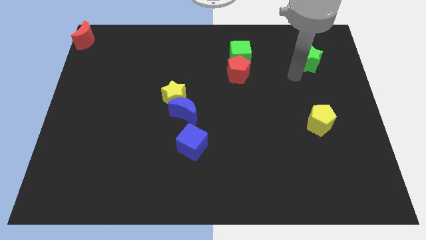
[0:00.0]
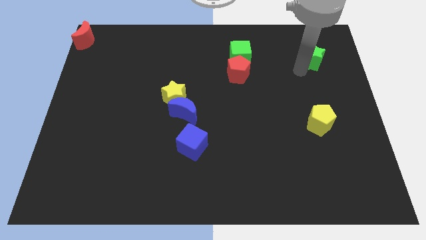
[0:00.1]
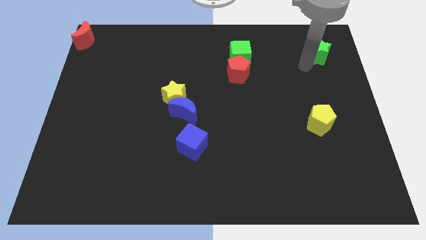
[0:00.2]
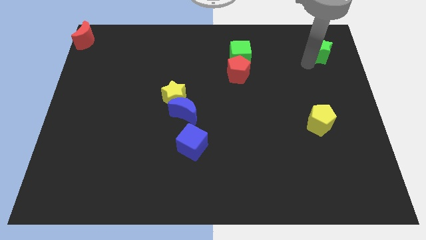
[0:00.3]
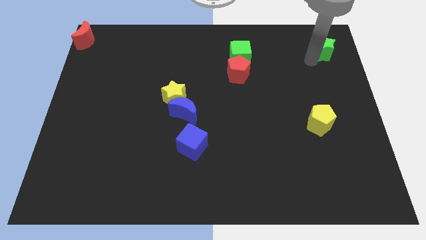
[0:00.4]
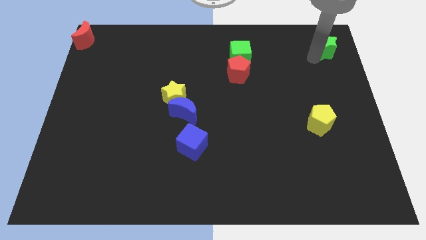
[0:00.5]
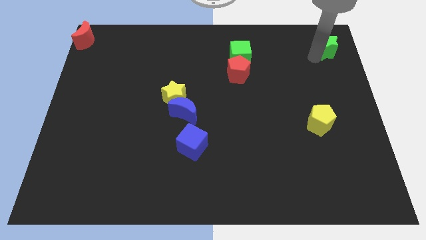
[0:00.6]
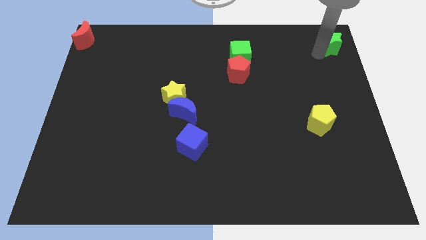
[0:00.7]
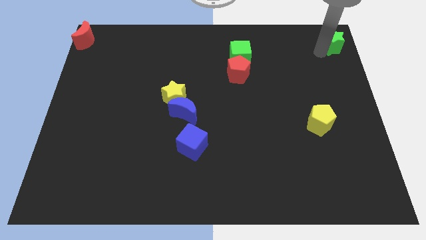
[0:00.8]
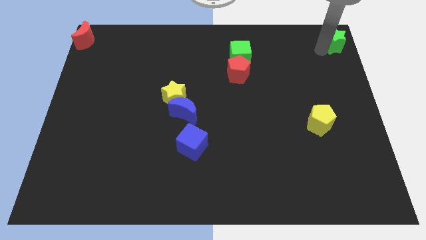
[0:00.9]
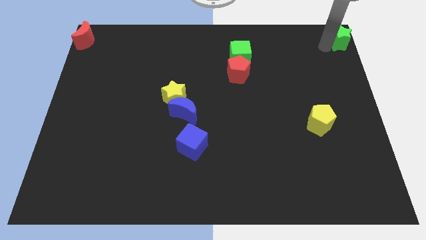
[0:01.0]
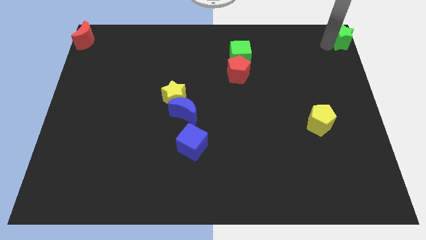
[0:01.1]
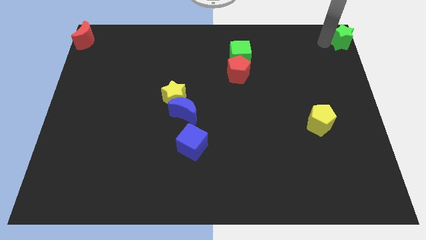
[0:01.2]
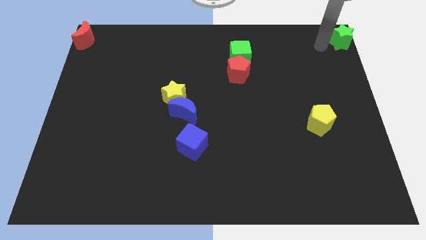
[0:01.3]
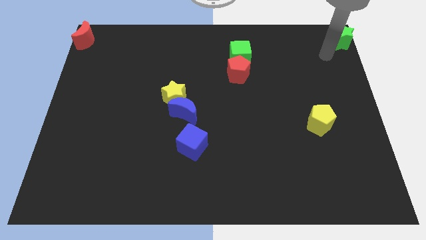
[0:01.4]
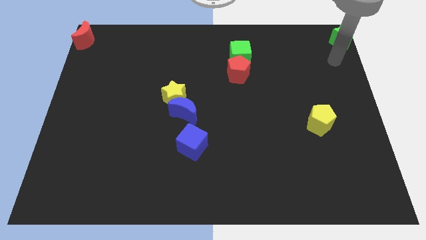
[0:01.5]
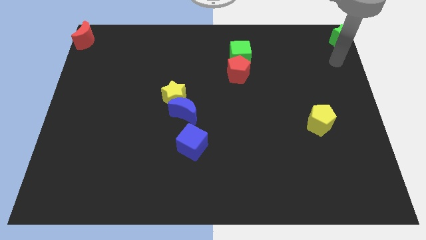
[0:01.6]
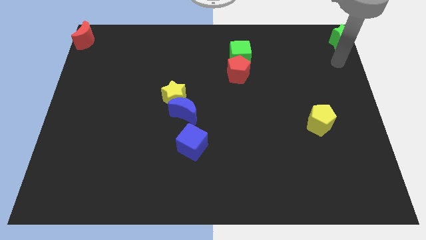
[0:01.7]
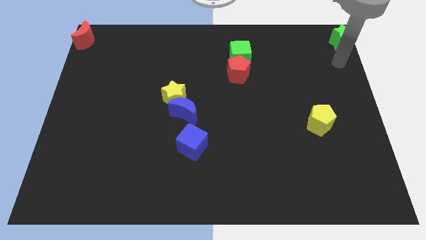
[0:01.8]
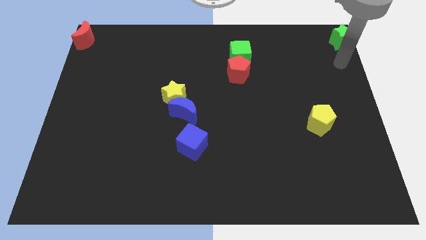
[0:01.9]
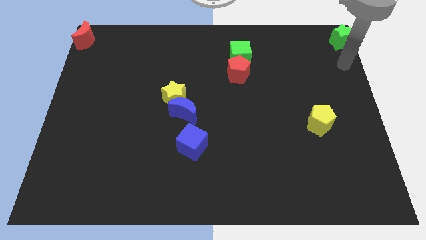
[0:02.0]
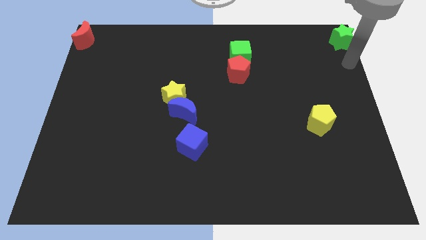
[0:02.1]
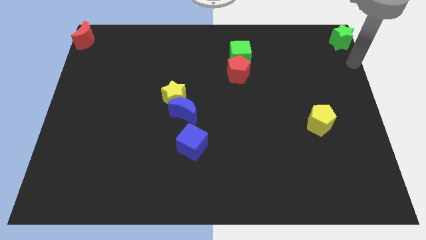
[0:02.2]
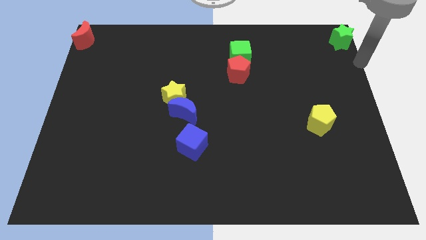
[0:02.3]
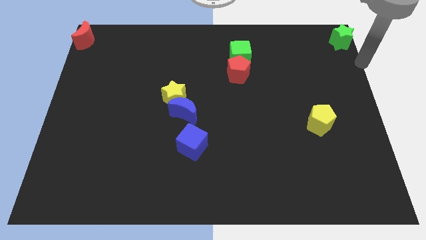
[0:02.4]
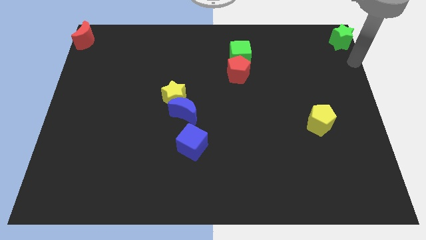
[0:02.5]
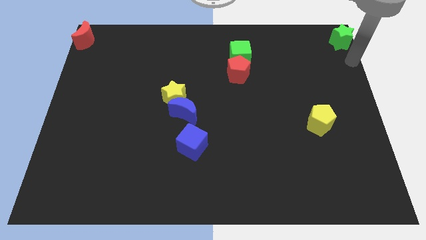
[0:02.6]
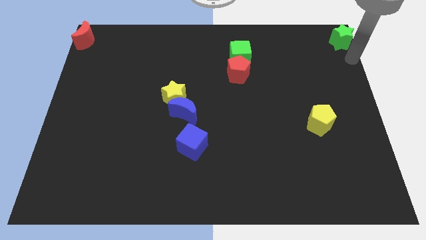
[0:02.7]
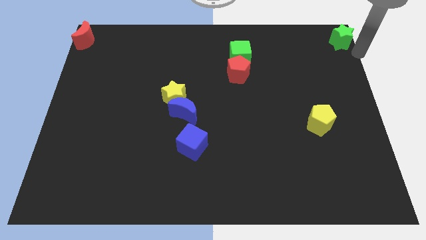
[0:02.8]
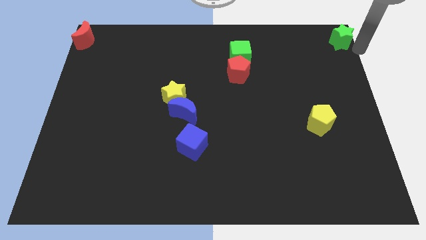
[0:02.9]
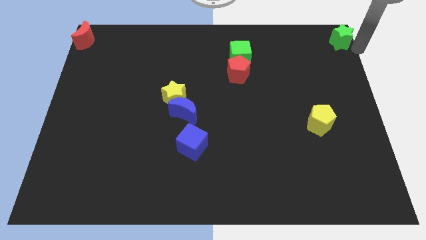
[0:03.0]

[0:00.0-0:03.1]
move the green star to the top right corner of the board

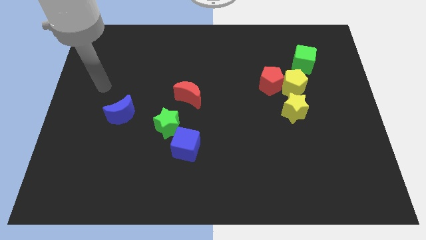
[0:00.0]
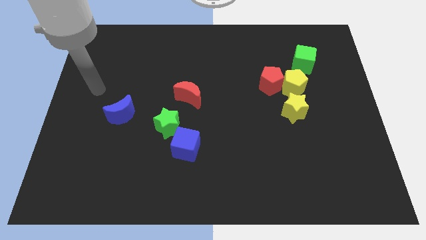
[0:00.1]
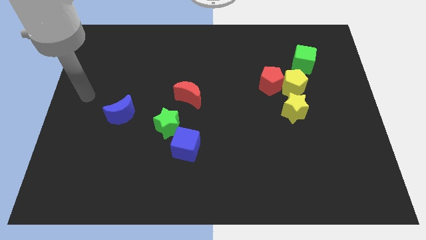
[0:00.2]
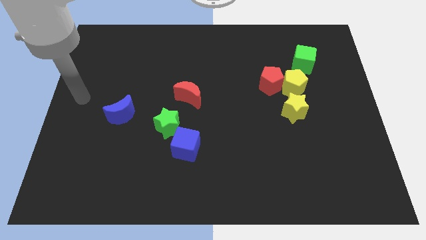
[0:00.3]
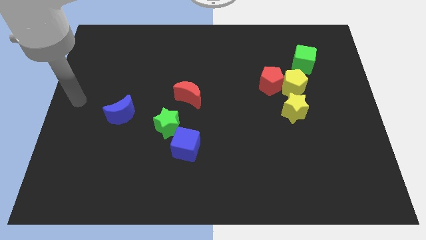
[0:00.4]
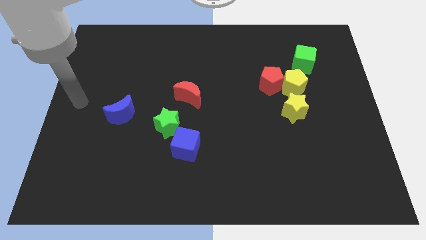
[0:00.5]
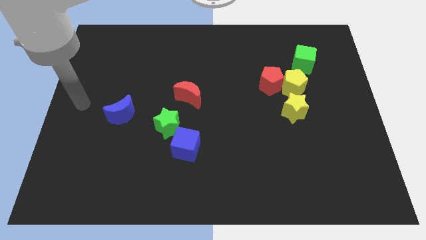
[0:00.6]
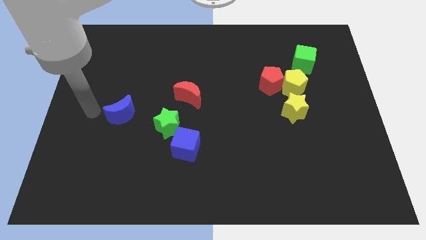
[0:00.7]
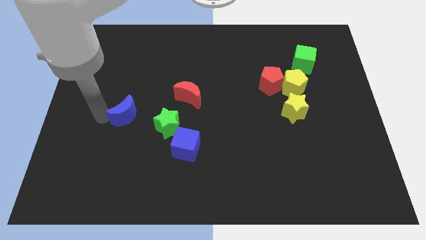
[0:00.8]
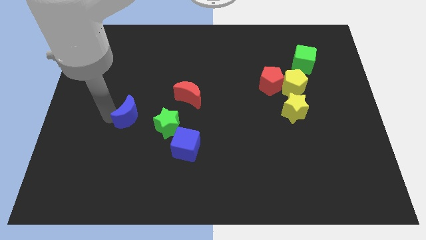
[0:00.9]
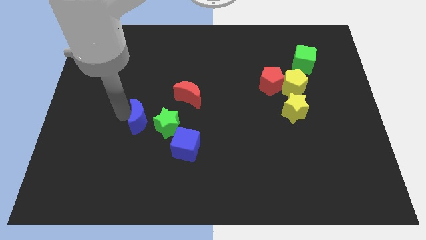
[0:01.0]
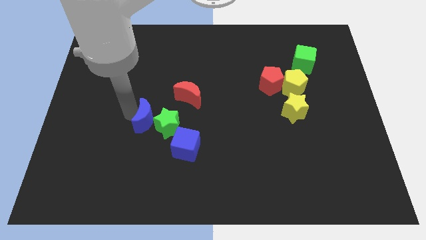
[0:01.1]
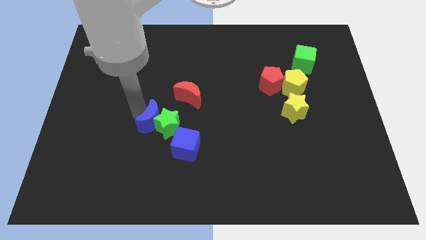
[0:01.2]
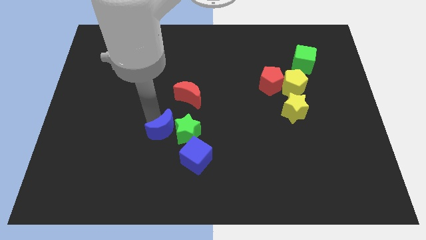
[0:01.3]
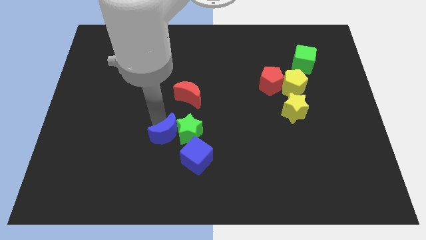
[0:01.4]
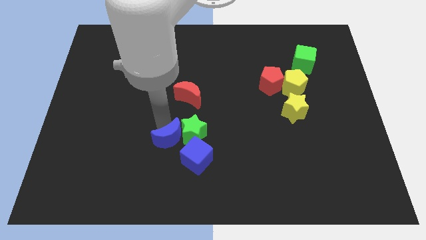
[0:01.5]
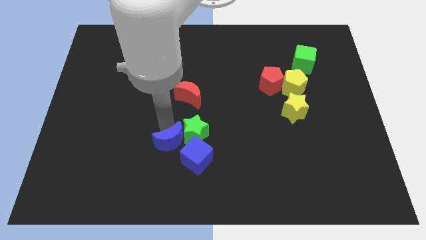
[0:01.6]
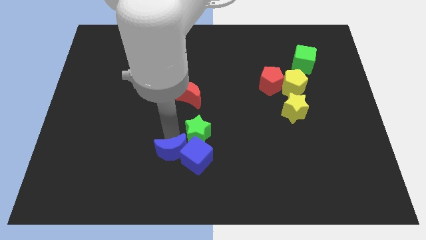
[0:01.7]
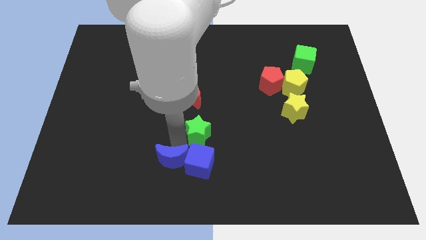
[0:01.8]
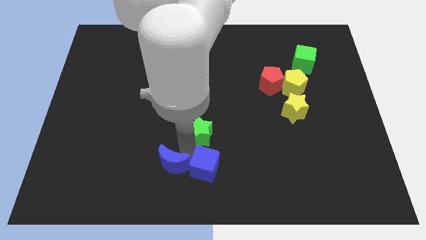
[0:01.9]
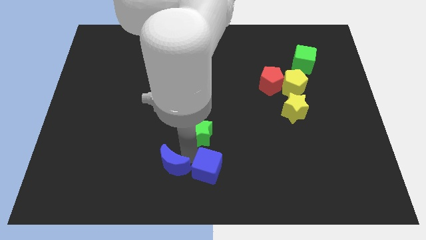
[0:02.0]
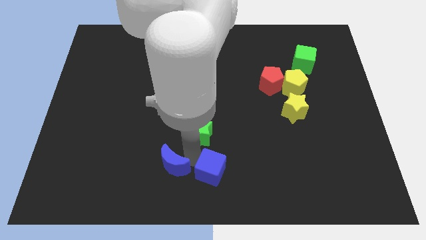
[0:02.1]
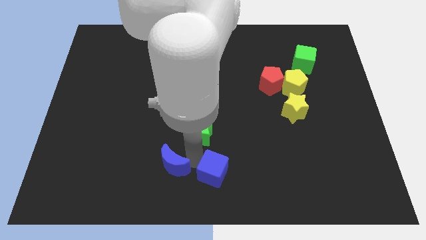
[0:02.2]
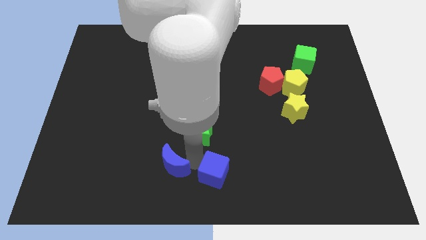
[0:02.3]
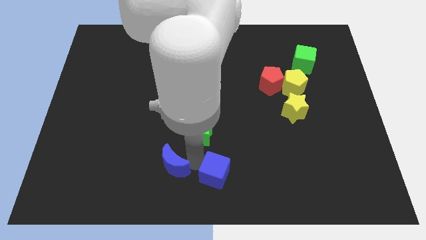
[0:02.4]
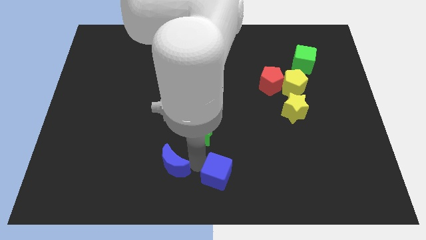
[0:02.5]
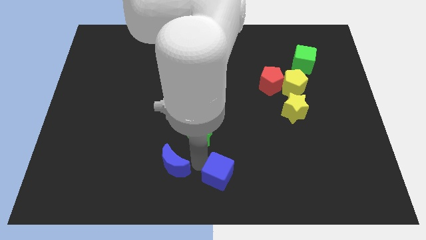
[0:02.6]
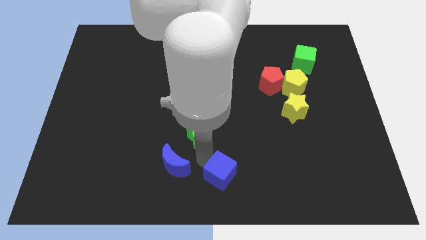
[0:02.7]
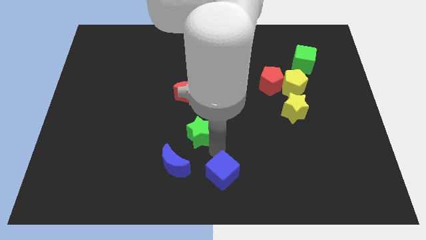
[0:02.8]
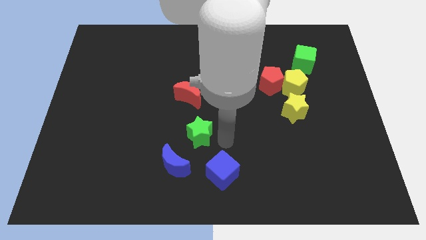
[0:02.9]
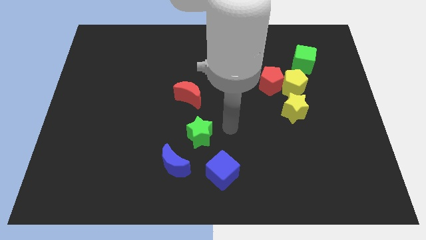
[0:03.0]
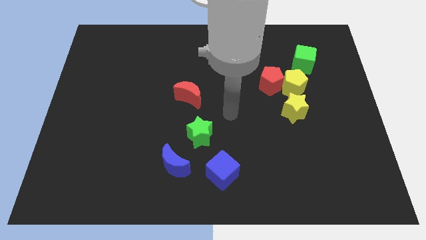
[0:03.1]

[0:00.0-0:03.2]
separate the green star and blue cube with the blue crescent

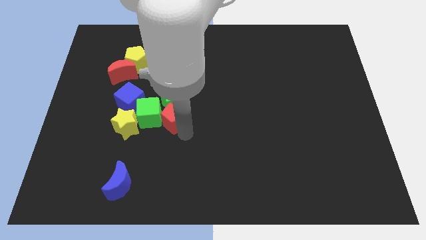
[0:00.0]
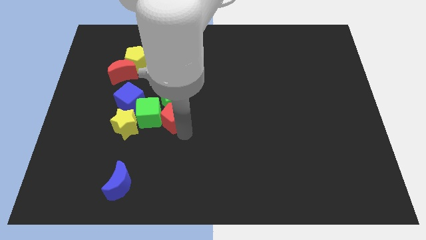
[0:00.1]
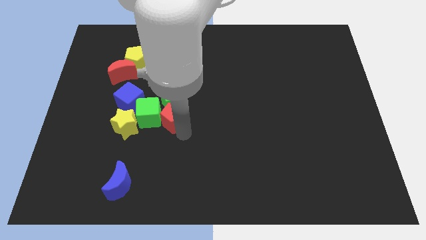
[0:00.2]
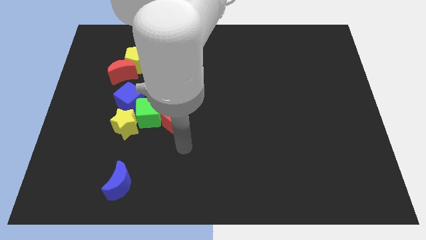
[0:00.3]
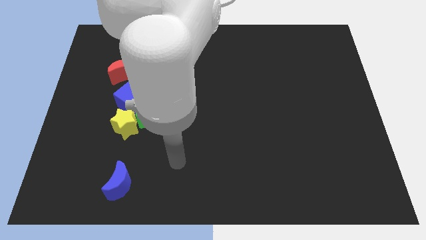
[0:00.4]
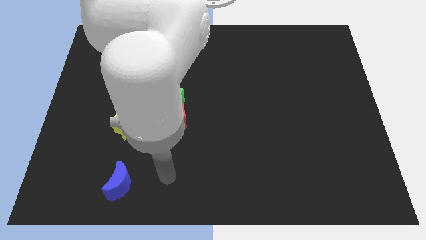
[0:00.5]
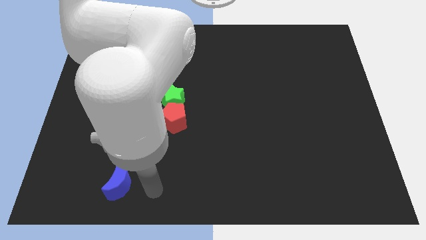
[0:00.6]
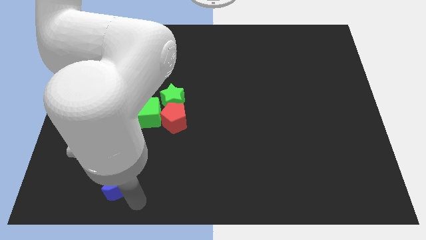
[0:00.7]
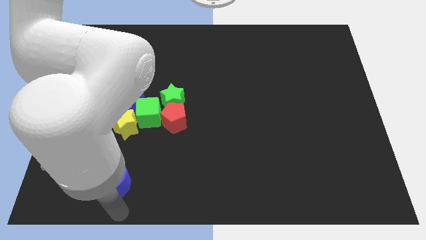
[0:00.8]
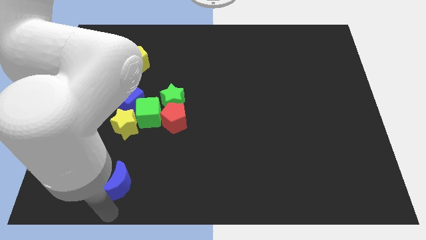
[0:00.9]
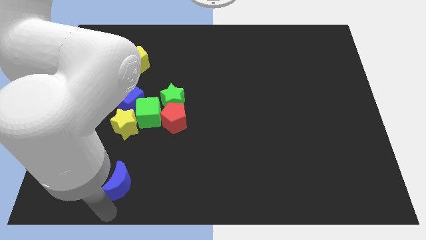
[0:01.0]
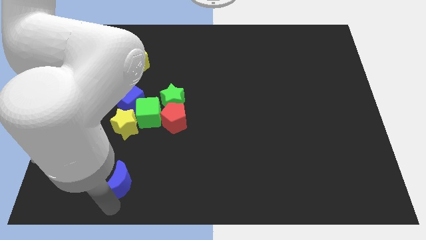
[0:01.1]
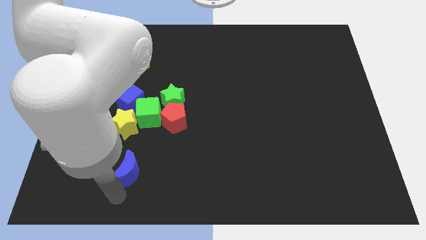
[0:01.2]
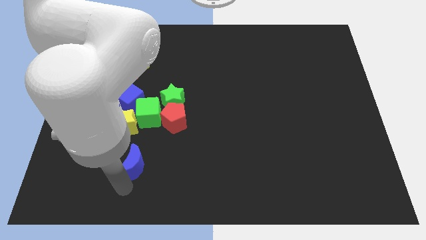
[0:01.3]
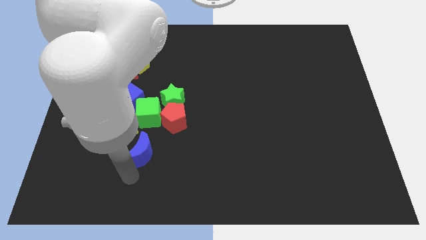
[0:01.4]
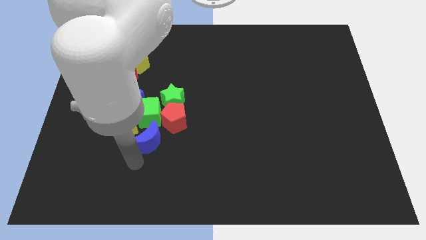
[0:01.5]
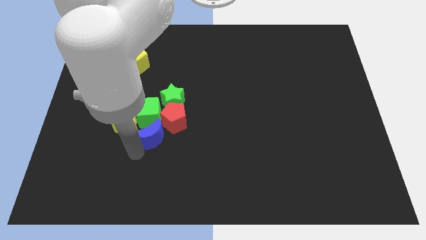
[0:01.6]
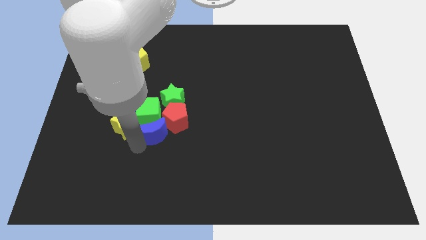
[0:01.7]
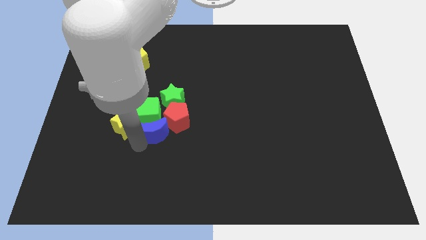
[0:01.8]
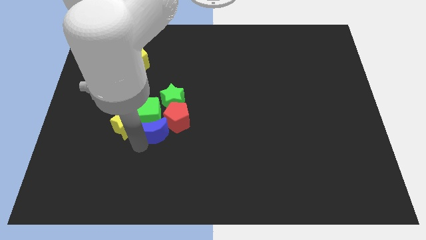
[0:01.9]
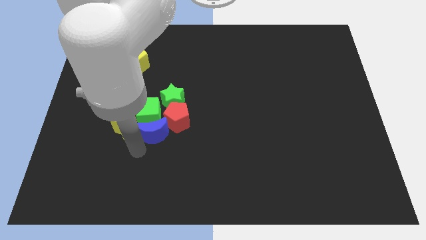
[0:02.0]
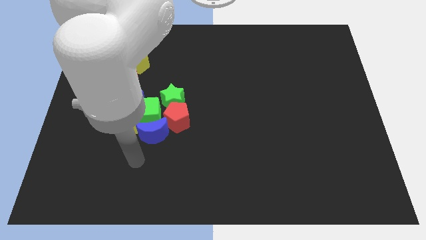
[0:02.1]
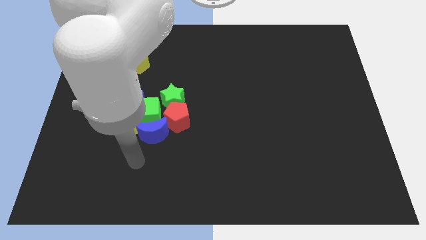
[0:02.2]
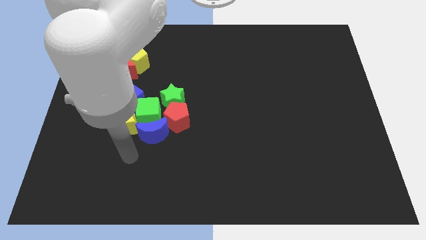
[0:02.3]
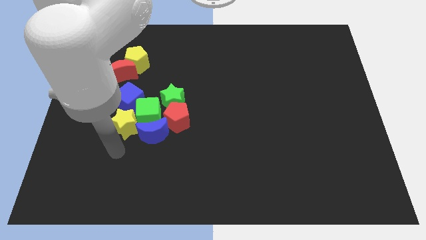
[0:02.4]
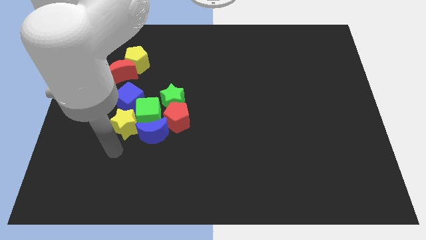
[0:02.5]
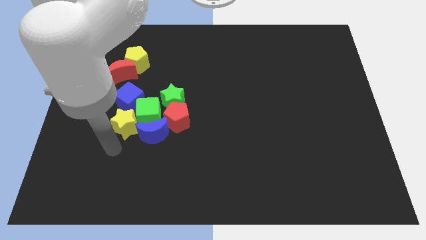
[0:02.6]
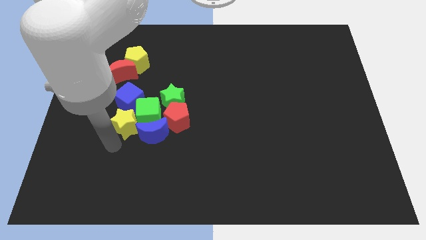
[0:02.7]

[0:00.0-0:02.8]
push the blue moon into the green cube
